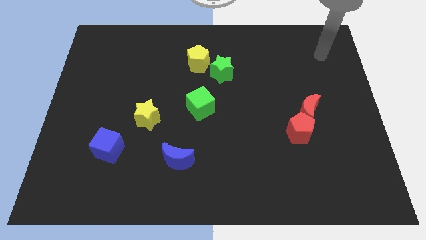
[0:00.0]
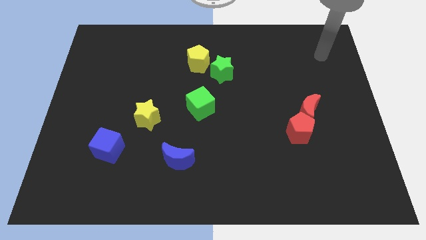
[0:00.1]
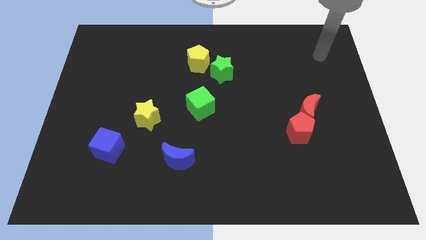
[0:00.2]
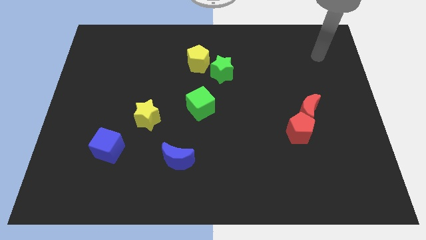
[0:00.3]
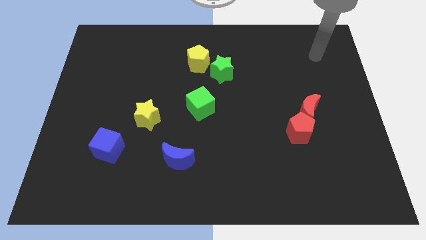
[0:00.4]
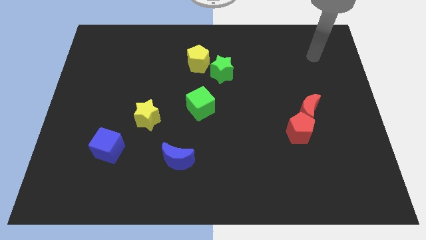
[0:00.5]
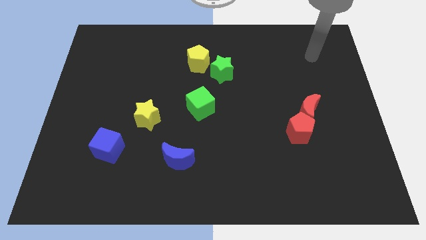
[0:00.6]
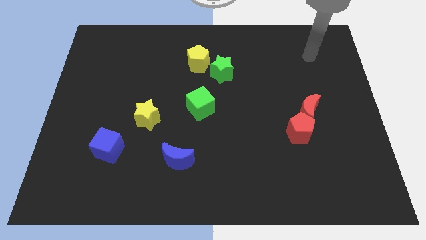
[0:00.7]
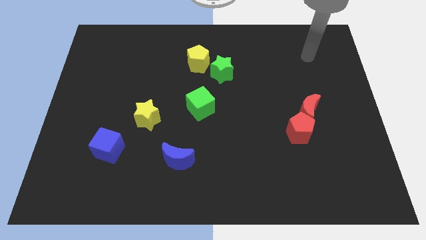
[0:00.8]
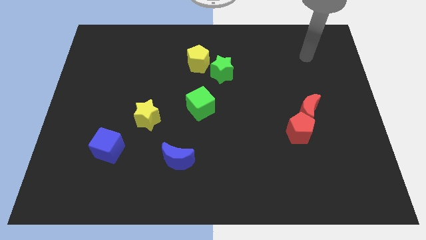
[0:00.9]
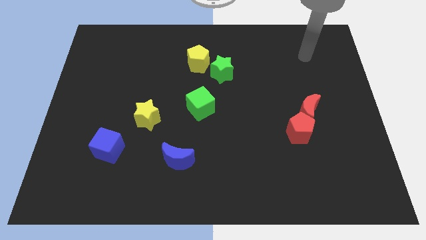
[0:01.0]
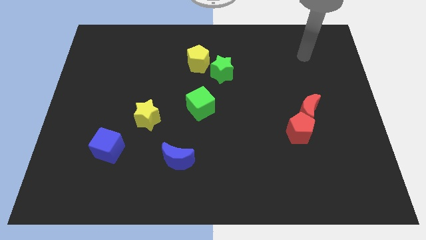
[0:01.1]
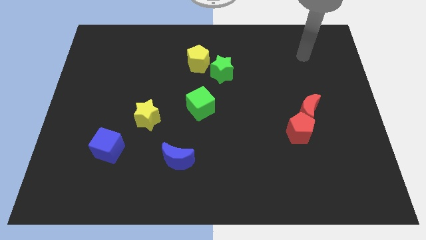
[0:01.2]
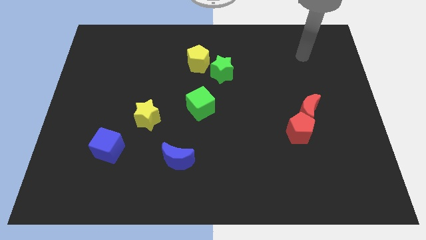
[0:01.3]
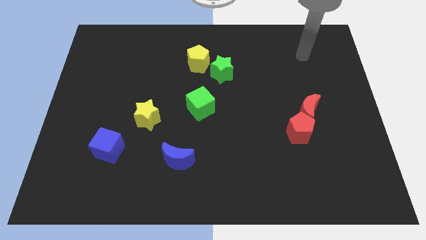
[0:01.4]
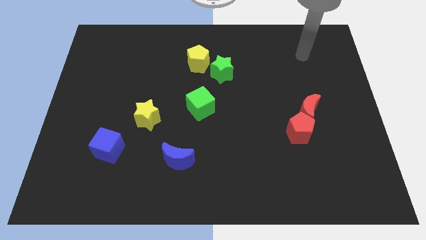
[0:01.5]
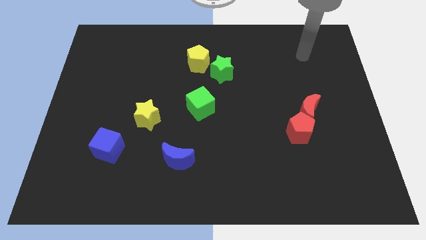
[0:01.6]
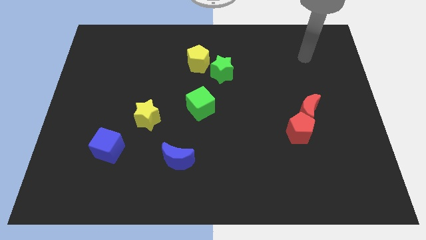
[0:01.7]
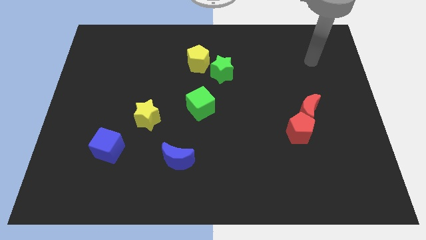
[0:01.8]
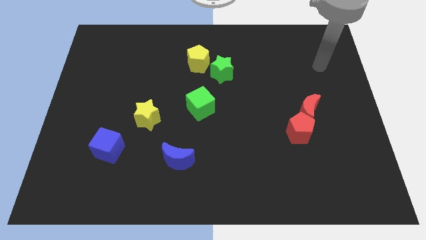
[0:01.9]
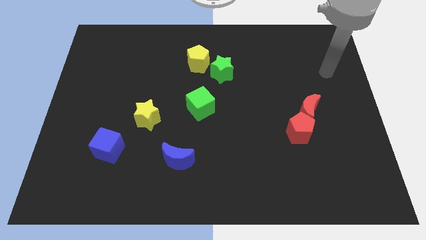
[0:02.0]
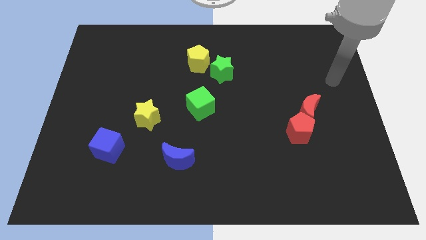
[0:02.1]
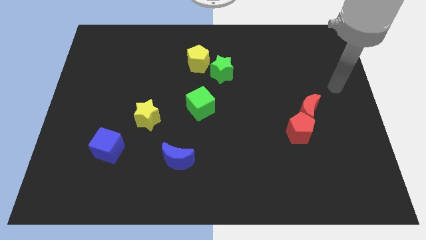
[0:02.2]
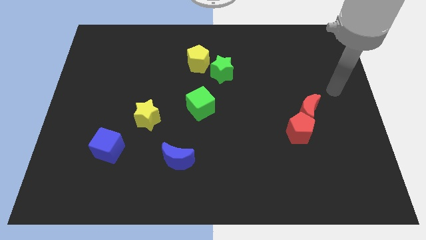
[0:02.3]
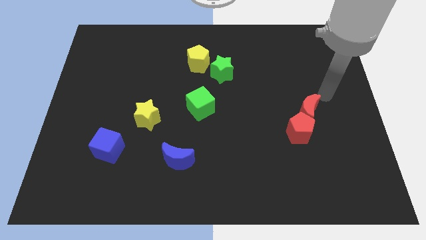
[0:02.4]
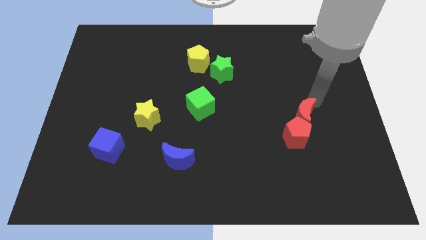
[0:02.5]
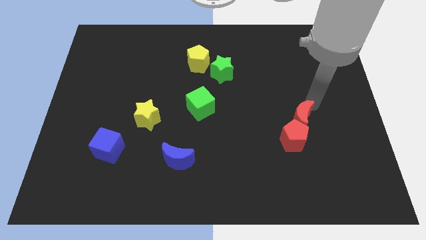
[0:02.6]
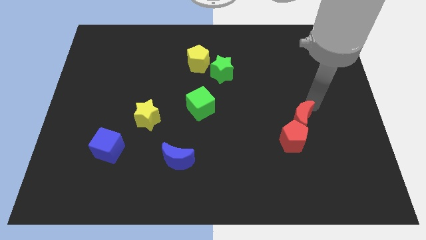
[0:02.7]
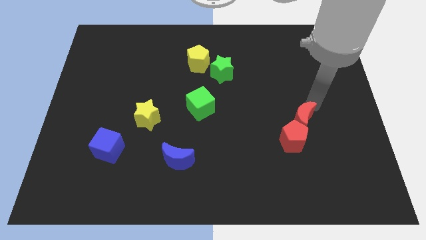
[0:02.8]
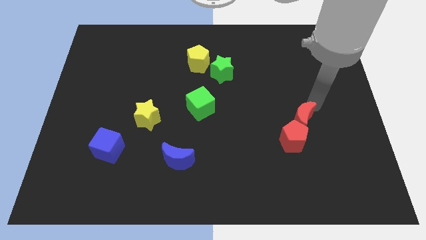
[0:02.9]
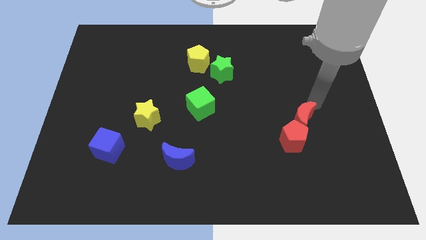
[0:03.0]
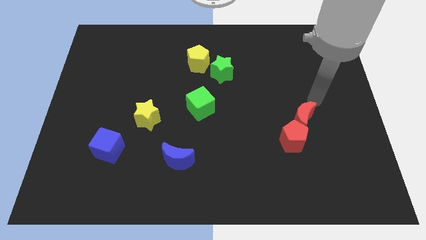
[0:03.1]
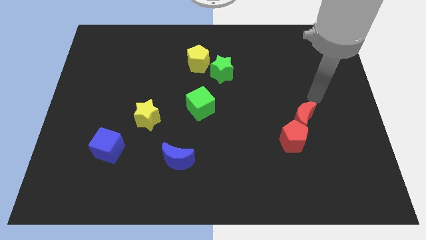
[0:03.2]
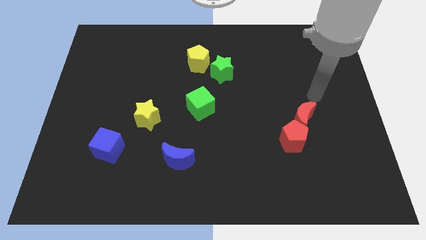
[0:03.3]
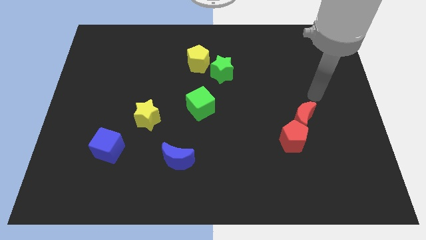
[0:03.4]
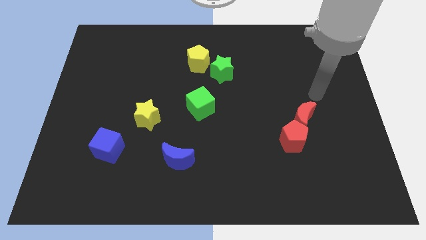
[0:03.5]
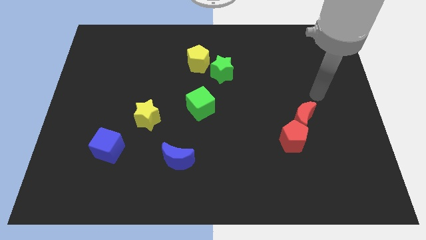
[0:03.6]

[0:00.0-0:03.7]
push the red blocks slightly downwards

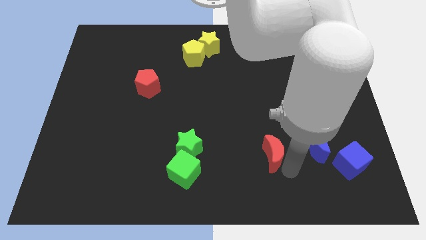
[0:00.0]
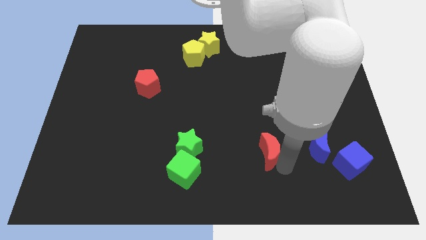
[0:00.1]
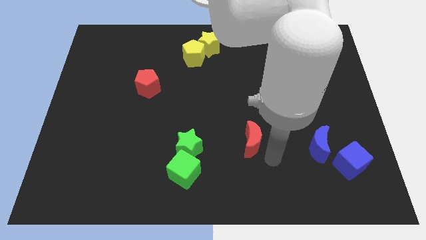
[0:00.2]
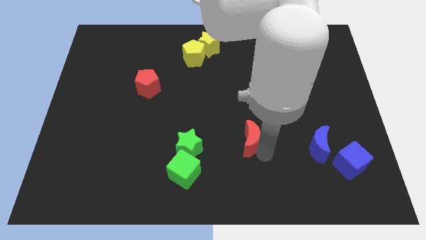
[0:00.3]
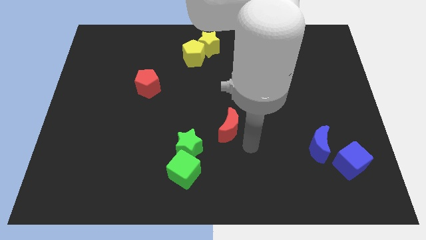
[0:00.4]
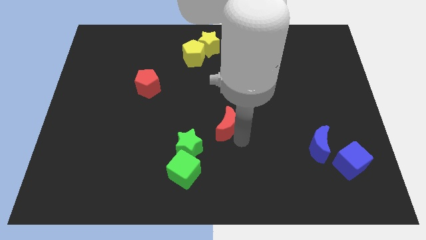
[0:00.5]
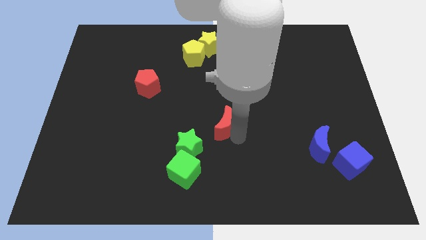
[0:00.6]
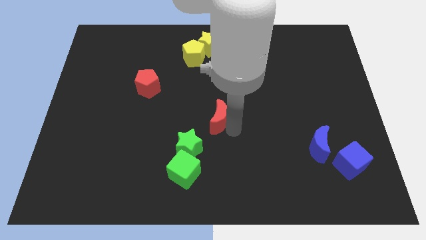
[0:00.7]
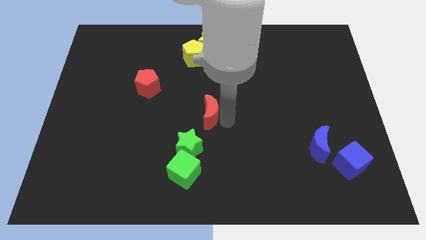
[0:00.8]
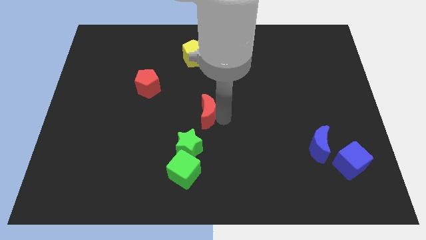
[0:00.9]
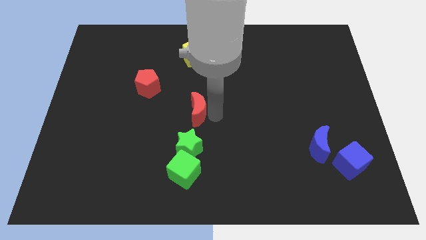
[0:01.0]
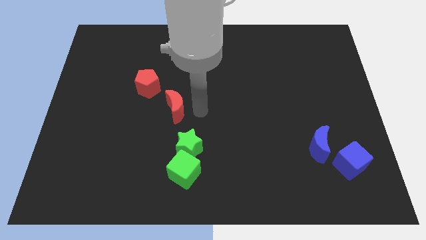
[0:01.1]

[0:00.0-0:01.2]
put red moon above green star

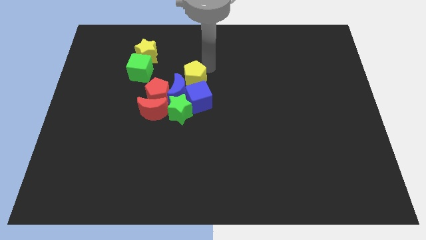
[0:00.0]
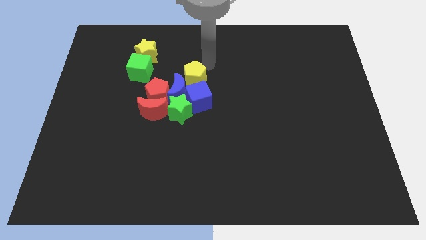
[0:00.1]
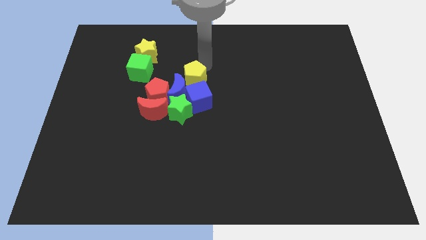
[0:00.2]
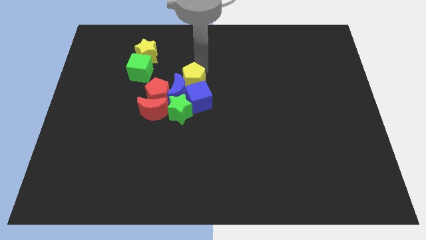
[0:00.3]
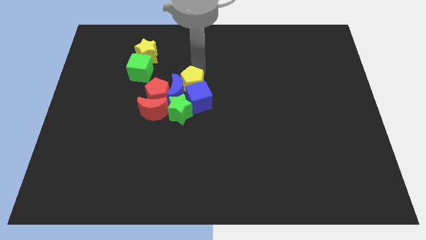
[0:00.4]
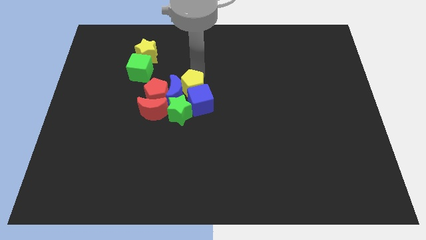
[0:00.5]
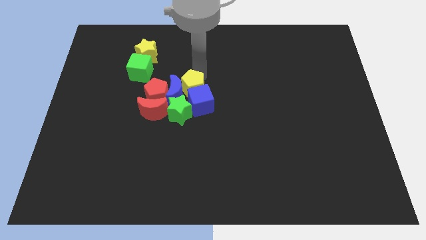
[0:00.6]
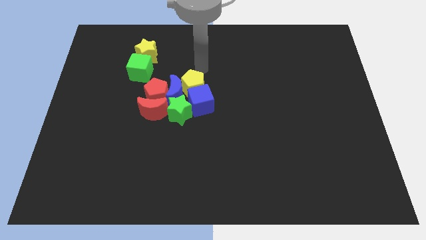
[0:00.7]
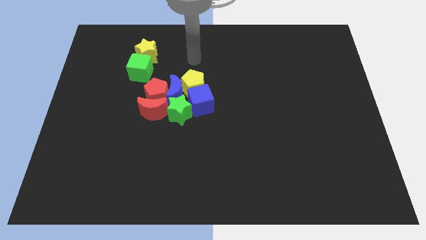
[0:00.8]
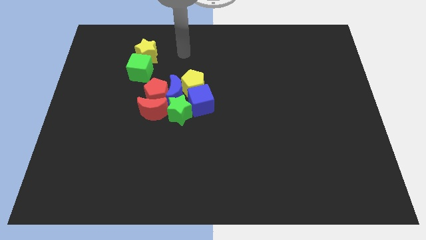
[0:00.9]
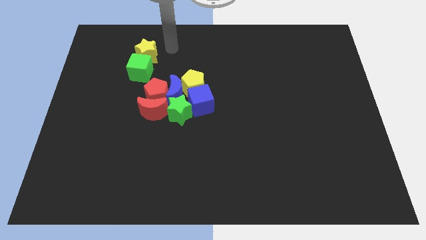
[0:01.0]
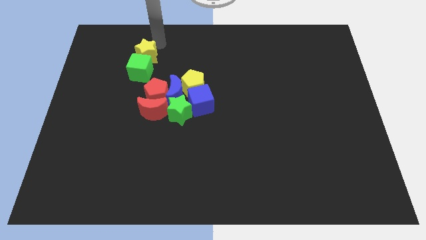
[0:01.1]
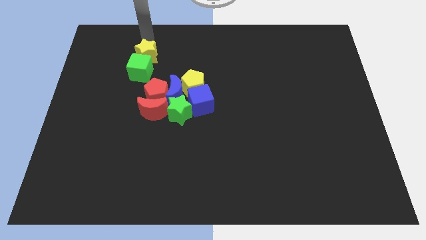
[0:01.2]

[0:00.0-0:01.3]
push the yellow pentagon into the blue cube

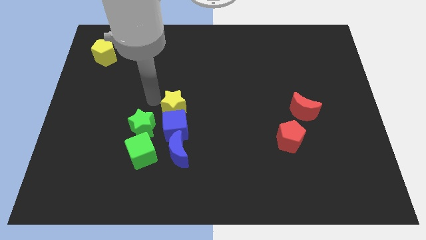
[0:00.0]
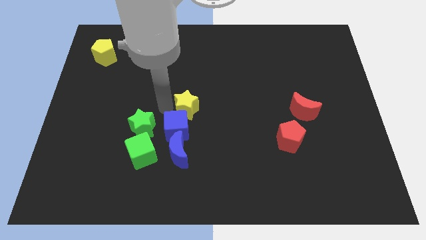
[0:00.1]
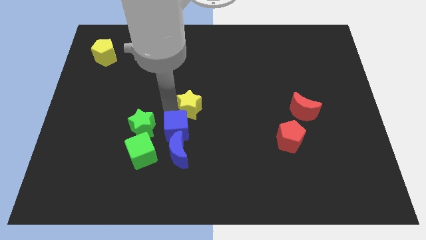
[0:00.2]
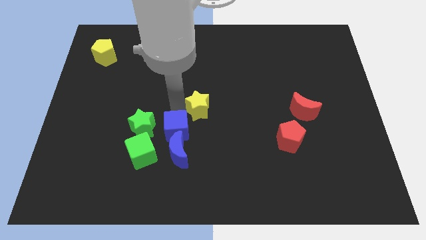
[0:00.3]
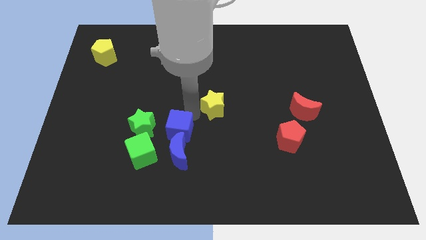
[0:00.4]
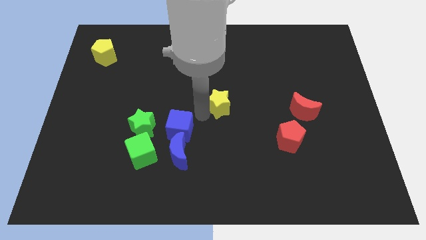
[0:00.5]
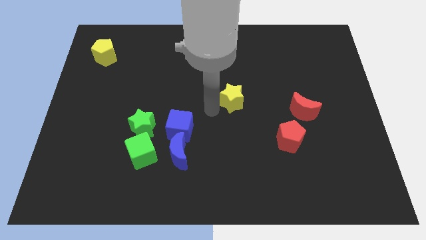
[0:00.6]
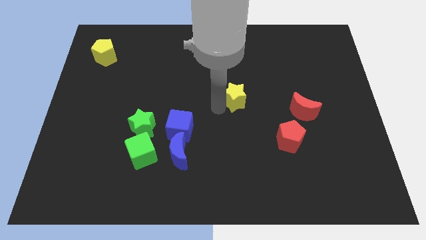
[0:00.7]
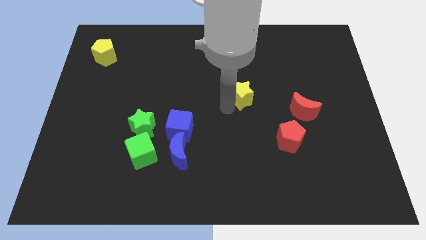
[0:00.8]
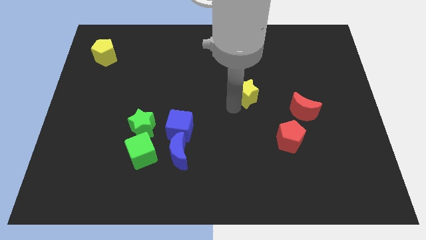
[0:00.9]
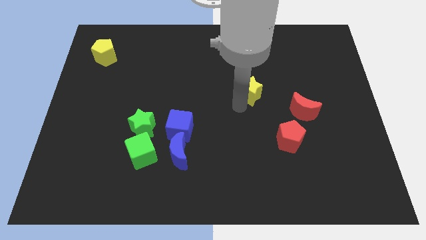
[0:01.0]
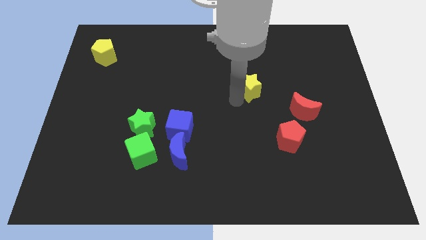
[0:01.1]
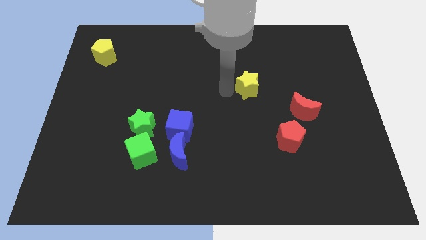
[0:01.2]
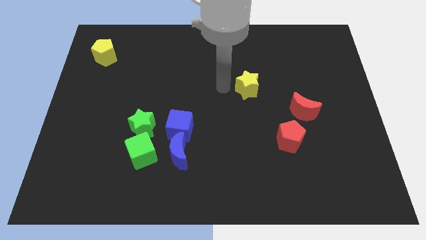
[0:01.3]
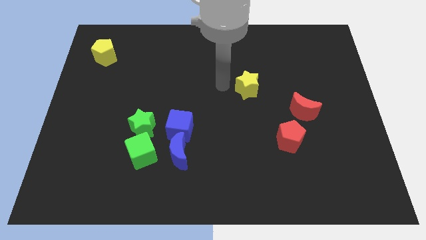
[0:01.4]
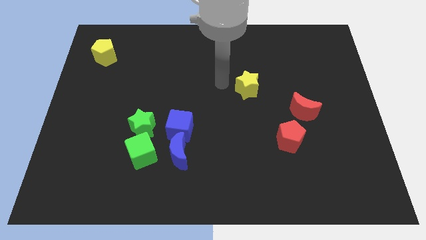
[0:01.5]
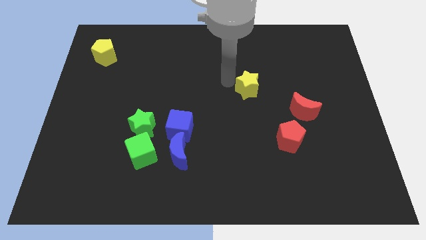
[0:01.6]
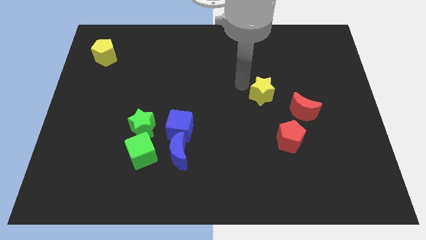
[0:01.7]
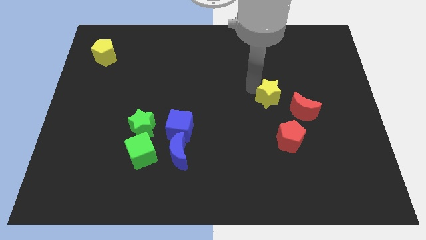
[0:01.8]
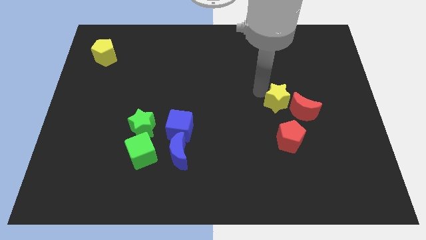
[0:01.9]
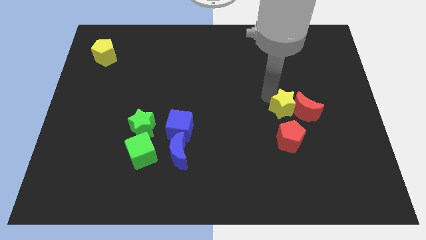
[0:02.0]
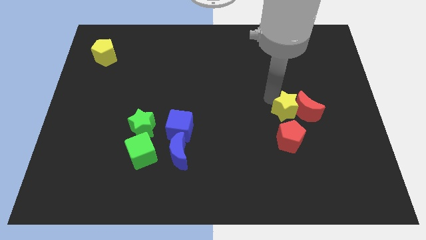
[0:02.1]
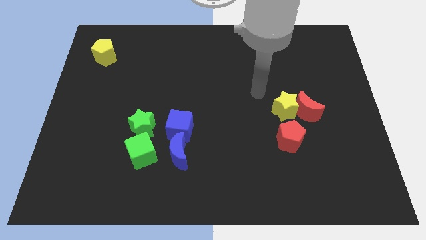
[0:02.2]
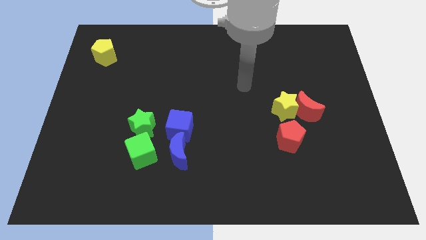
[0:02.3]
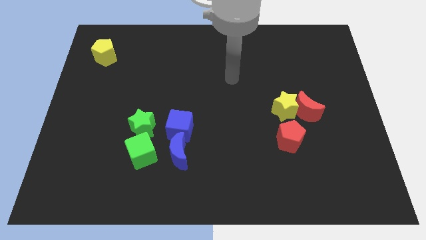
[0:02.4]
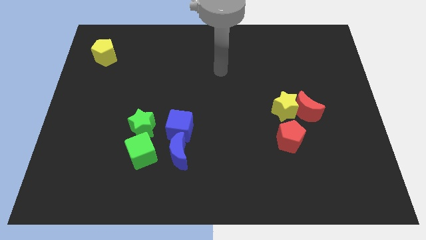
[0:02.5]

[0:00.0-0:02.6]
push the yellow star into red moon
